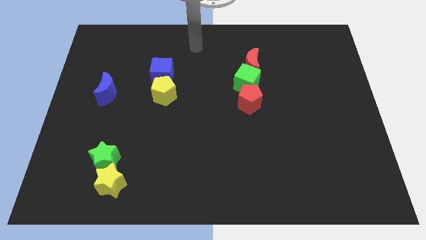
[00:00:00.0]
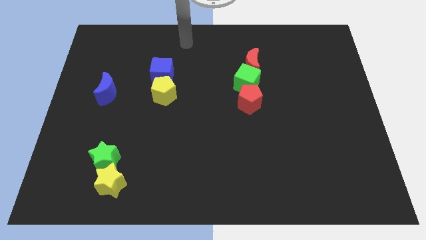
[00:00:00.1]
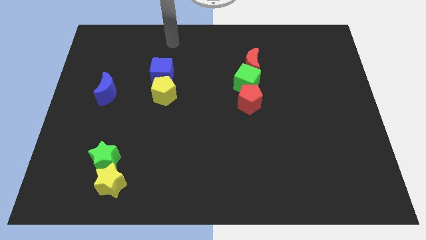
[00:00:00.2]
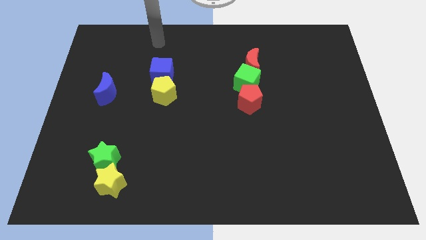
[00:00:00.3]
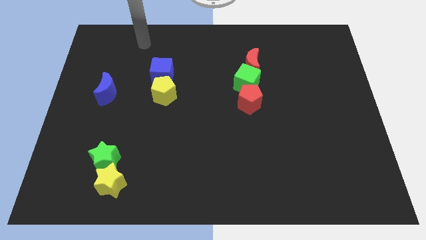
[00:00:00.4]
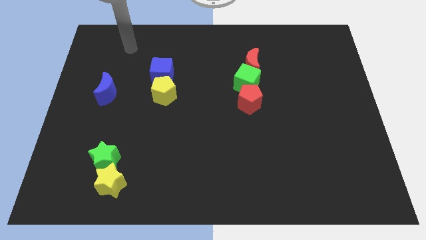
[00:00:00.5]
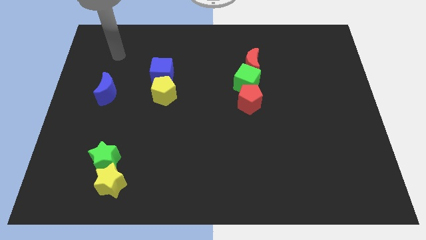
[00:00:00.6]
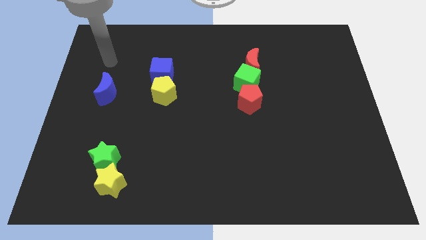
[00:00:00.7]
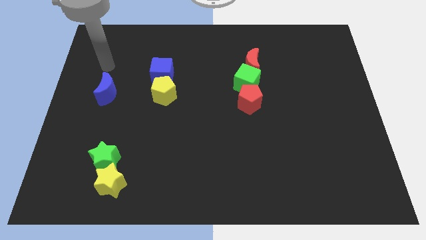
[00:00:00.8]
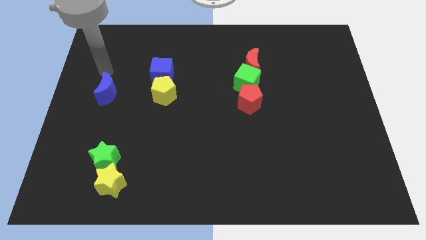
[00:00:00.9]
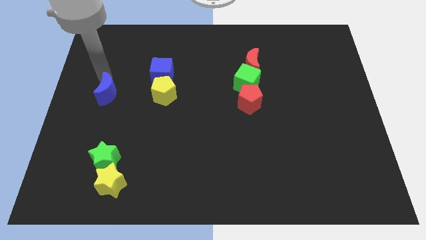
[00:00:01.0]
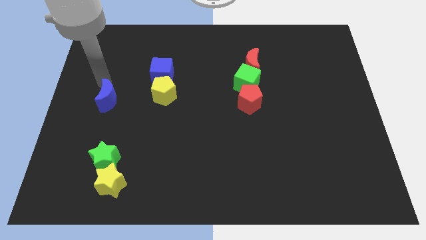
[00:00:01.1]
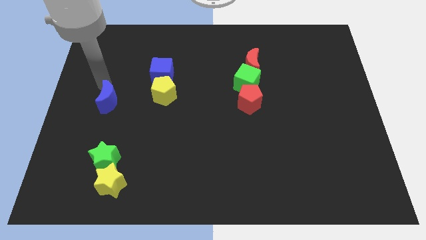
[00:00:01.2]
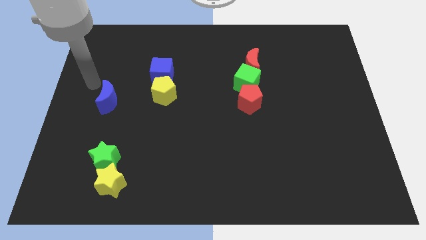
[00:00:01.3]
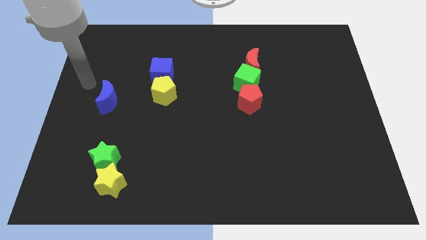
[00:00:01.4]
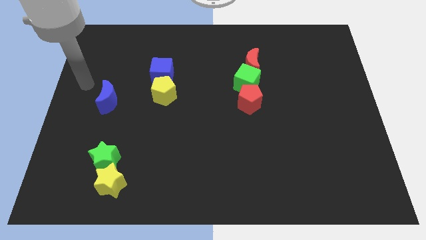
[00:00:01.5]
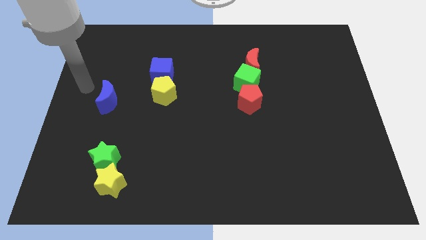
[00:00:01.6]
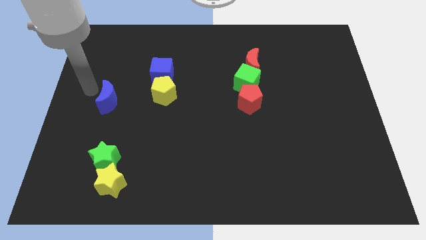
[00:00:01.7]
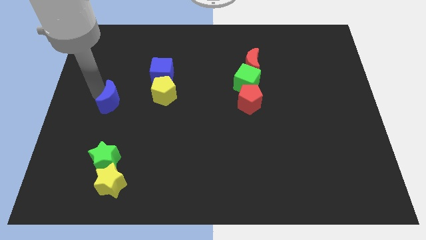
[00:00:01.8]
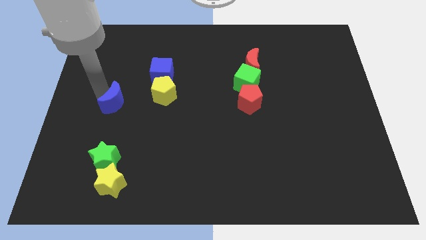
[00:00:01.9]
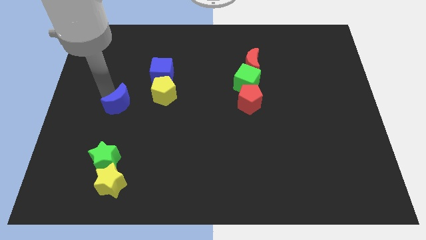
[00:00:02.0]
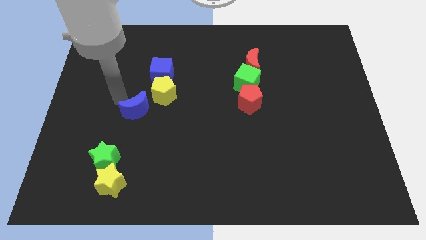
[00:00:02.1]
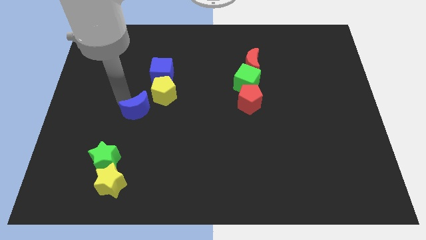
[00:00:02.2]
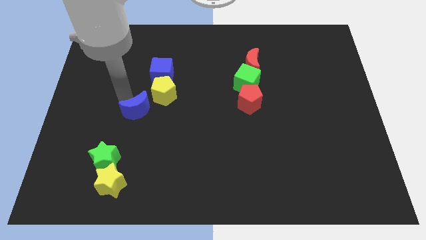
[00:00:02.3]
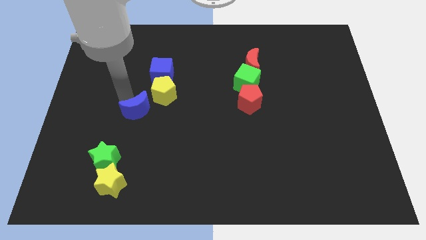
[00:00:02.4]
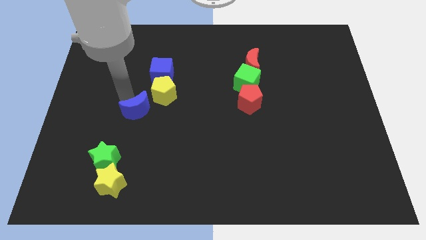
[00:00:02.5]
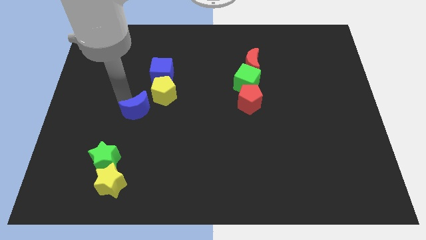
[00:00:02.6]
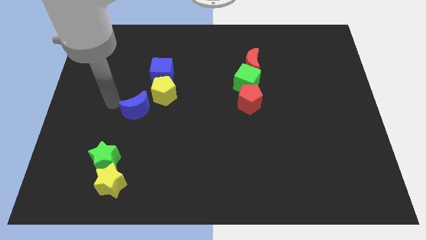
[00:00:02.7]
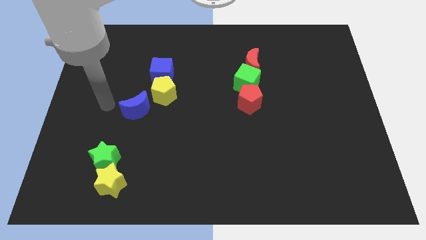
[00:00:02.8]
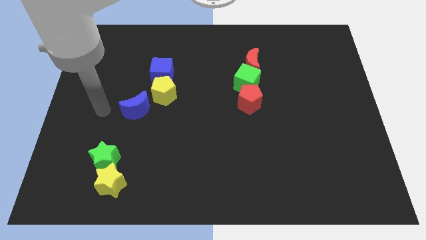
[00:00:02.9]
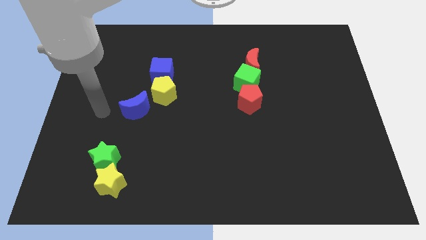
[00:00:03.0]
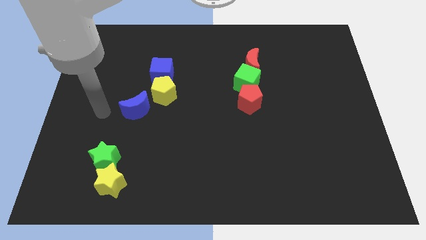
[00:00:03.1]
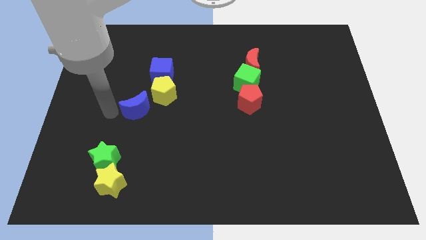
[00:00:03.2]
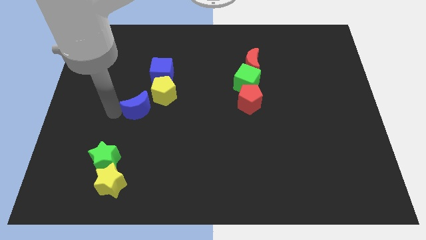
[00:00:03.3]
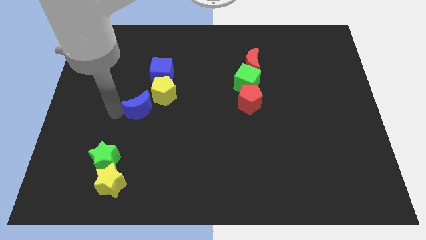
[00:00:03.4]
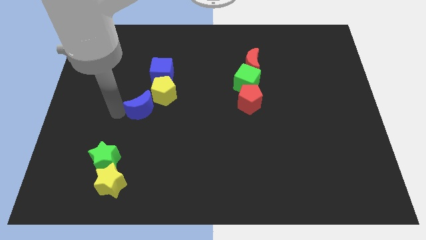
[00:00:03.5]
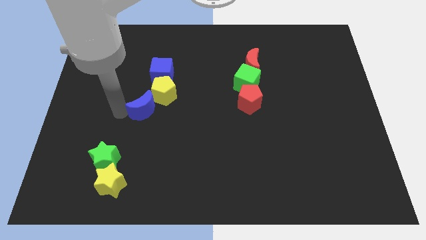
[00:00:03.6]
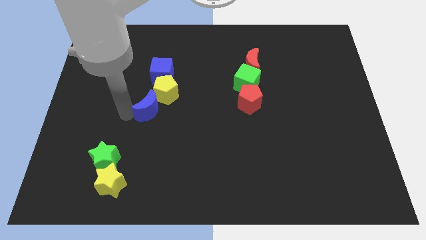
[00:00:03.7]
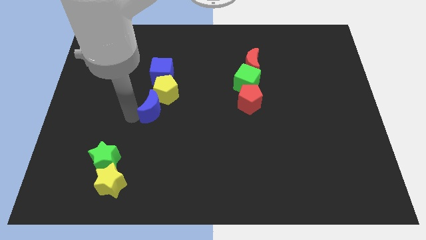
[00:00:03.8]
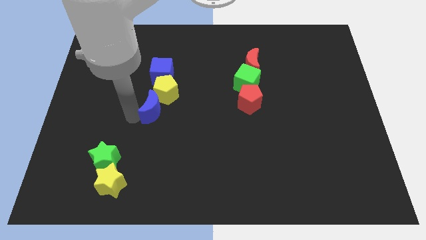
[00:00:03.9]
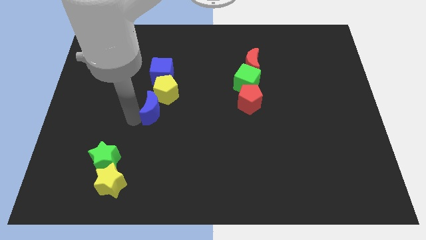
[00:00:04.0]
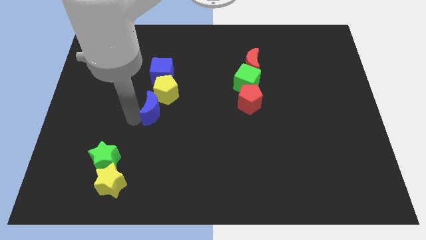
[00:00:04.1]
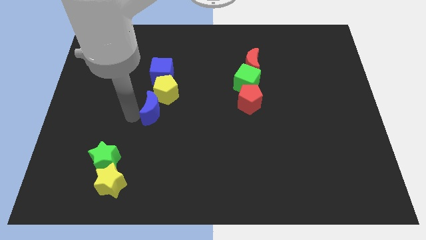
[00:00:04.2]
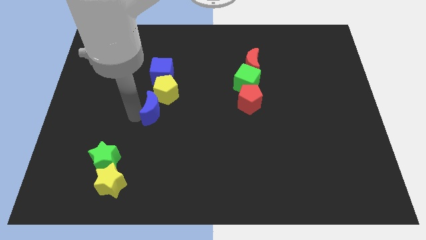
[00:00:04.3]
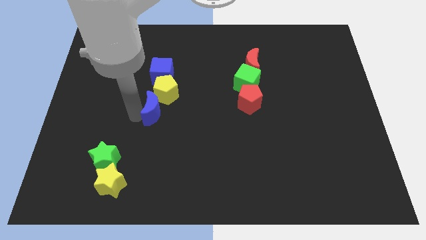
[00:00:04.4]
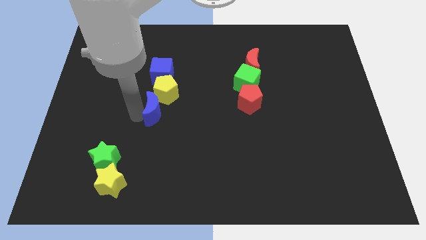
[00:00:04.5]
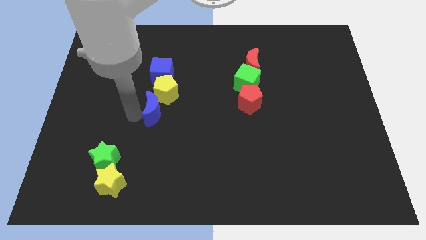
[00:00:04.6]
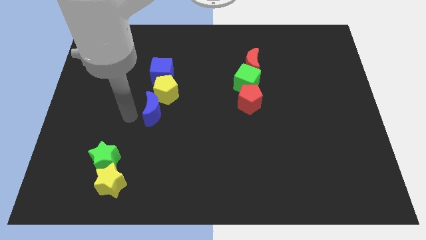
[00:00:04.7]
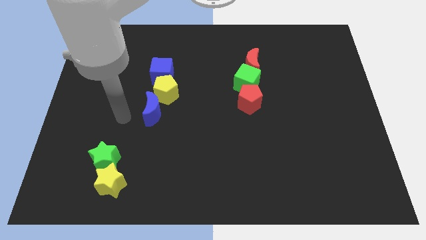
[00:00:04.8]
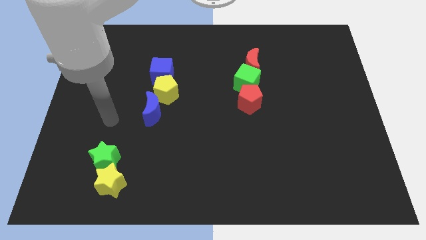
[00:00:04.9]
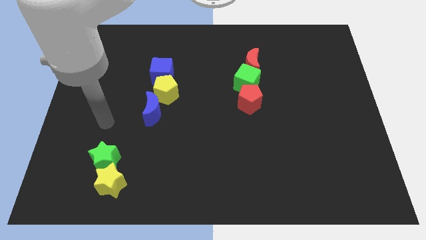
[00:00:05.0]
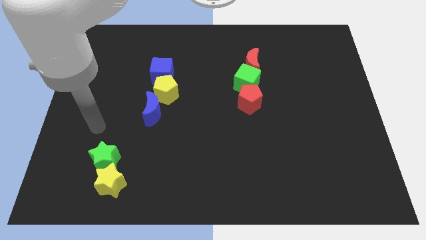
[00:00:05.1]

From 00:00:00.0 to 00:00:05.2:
push the blue crescent below the yellow pentagon

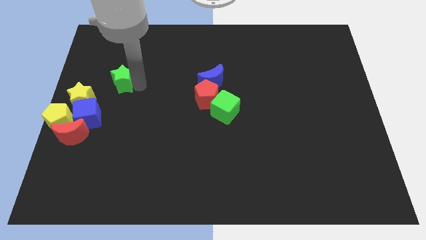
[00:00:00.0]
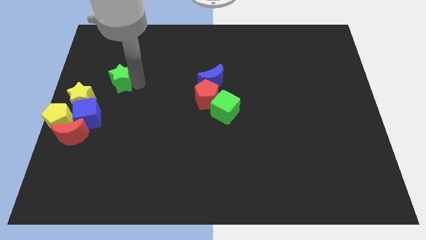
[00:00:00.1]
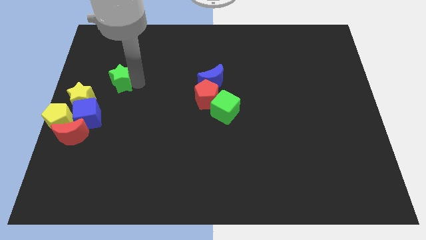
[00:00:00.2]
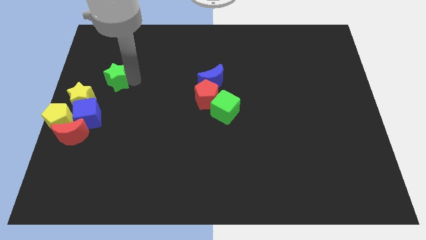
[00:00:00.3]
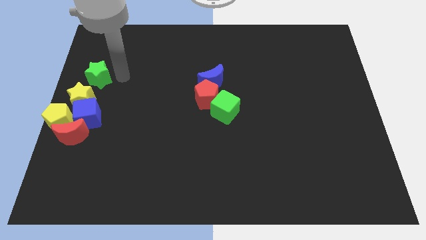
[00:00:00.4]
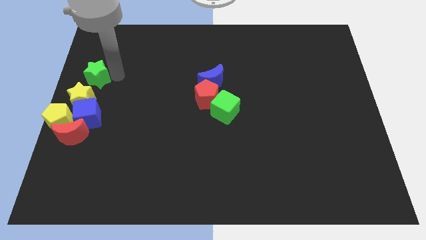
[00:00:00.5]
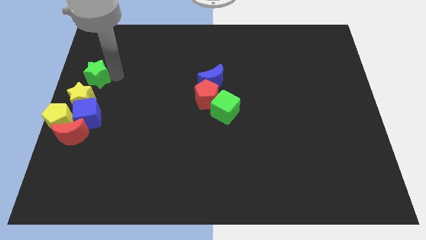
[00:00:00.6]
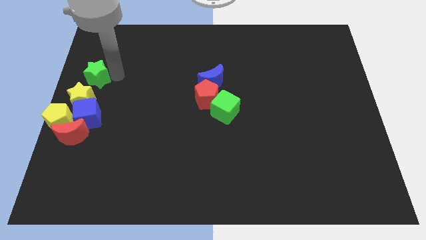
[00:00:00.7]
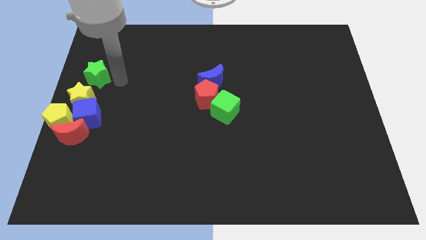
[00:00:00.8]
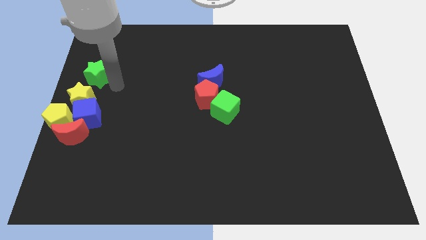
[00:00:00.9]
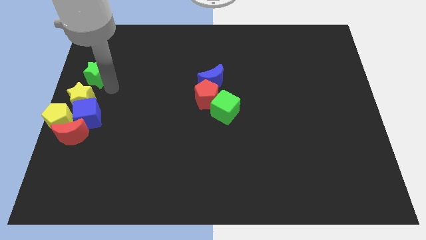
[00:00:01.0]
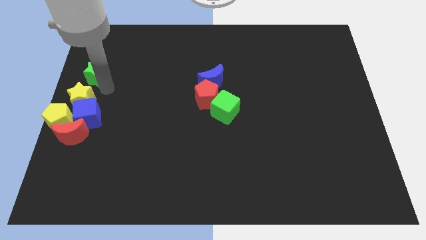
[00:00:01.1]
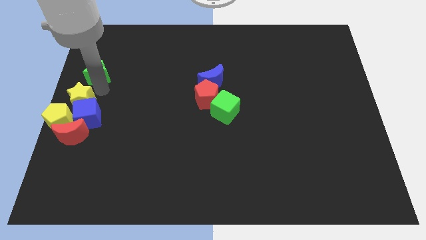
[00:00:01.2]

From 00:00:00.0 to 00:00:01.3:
push the green star towards the left side of the board

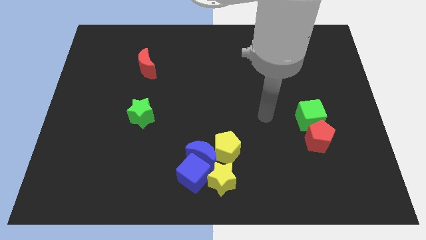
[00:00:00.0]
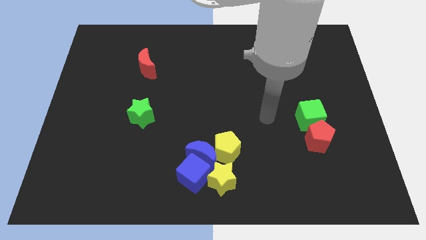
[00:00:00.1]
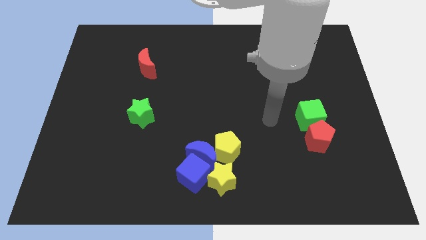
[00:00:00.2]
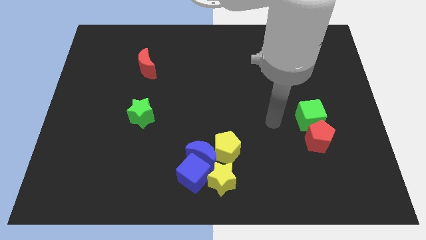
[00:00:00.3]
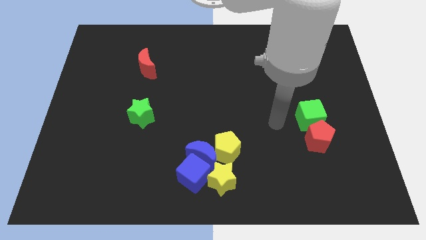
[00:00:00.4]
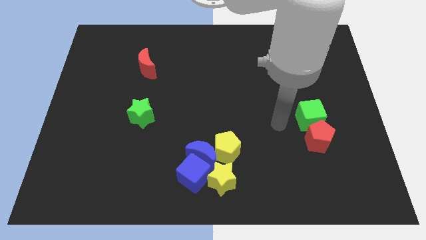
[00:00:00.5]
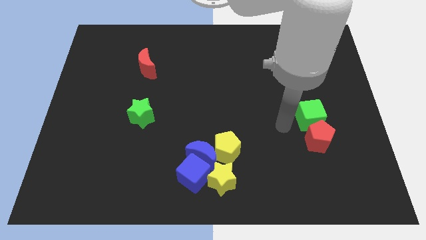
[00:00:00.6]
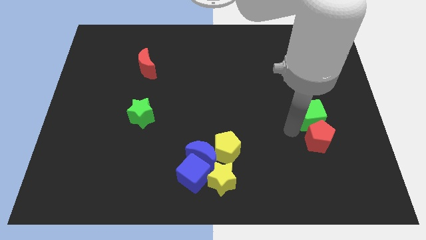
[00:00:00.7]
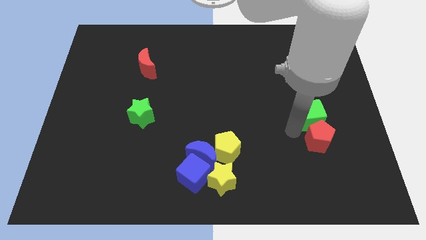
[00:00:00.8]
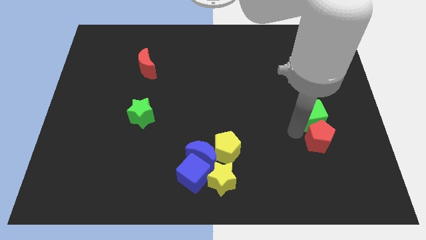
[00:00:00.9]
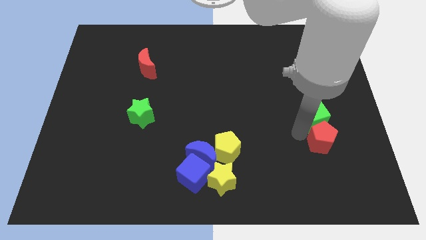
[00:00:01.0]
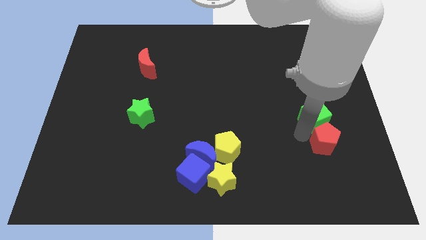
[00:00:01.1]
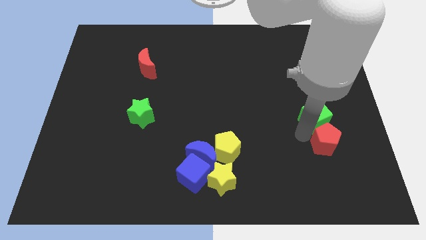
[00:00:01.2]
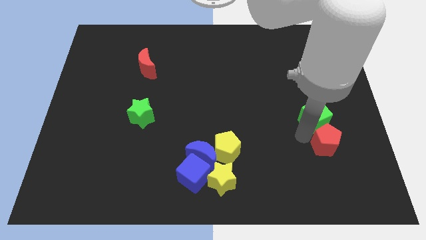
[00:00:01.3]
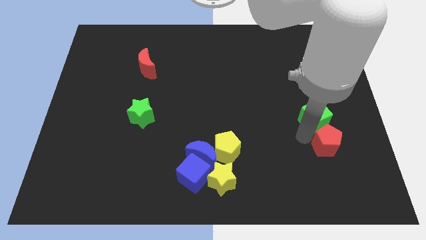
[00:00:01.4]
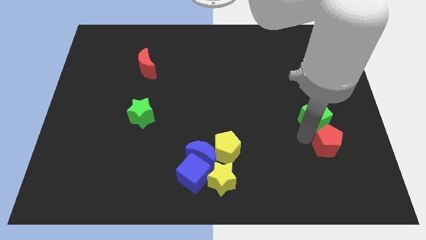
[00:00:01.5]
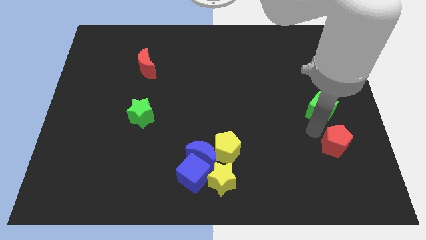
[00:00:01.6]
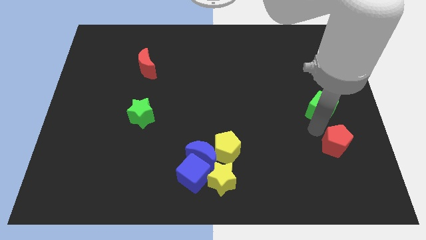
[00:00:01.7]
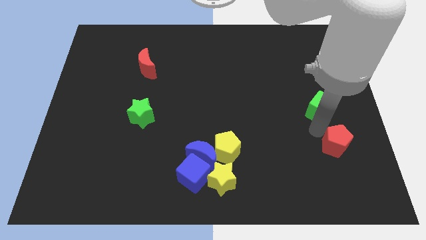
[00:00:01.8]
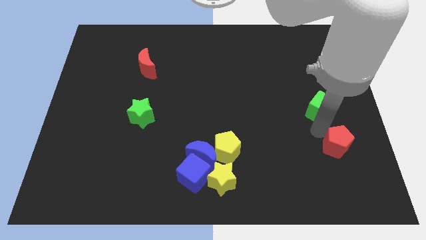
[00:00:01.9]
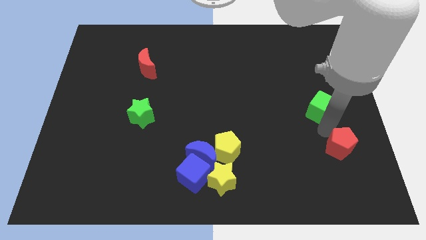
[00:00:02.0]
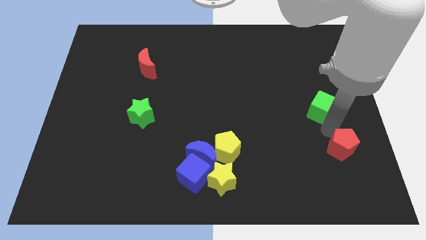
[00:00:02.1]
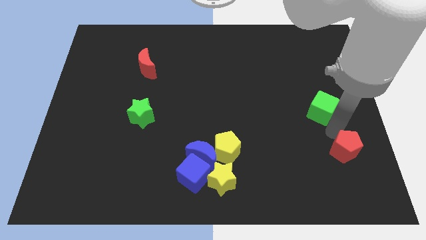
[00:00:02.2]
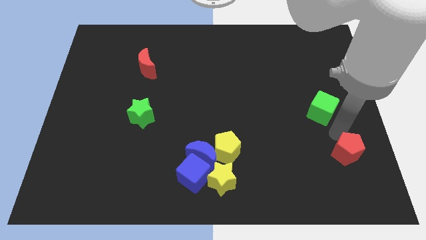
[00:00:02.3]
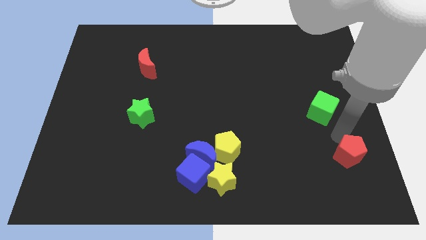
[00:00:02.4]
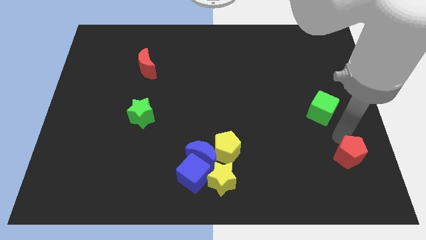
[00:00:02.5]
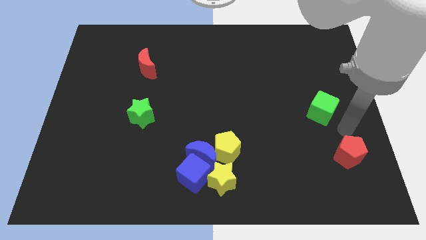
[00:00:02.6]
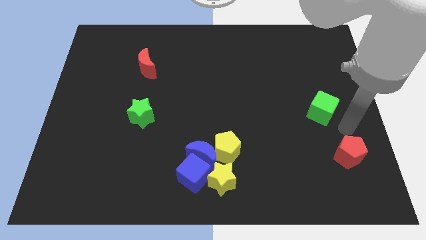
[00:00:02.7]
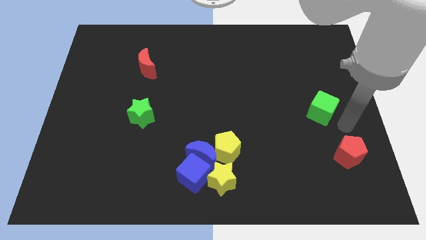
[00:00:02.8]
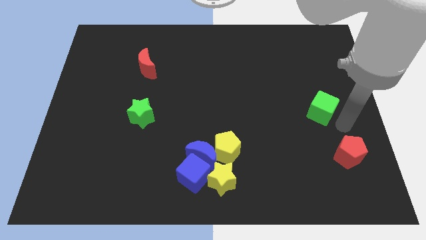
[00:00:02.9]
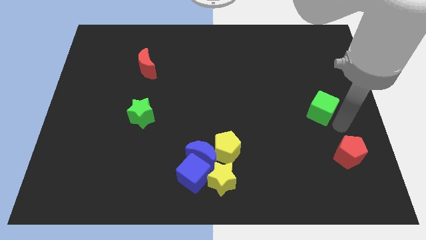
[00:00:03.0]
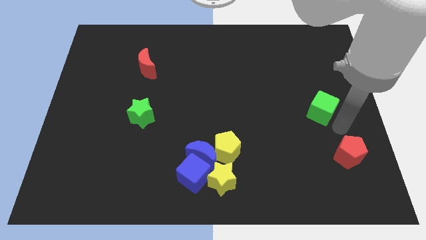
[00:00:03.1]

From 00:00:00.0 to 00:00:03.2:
separate the green cube and the red pentagon
